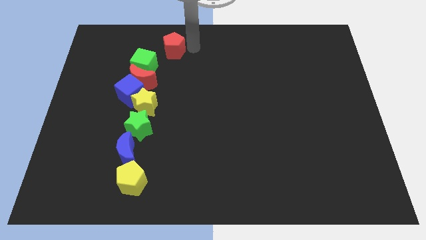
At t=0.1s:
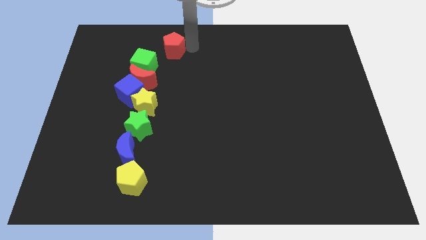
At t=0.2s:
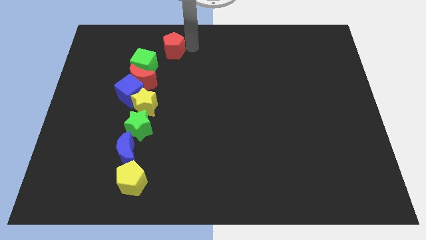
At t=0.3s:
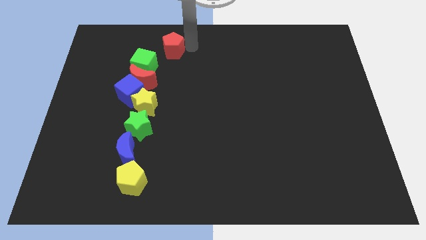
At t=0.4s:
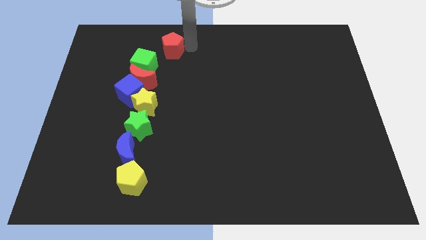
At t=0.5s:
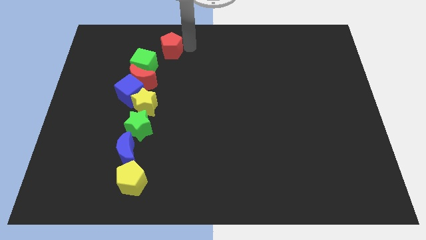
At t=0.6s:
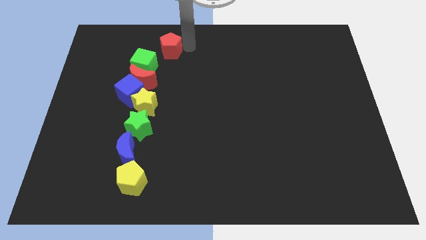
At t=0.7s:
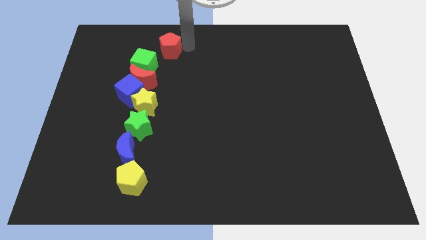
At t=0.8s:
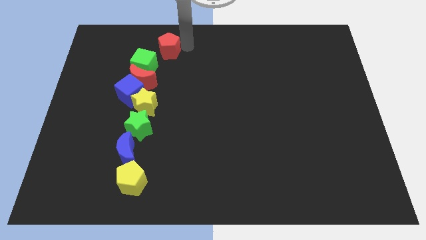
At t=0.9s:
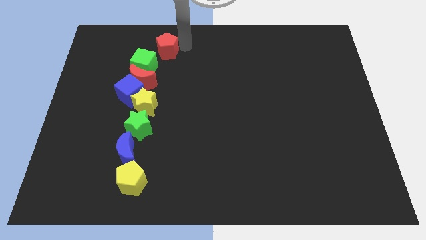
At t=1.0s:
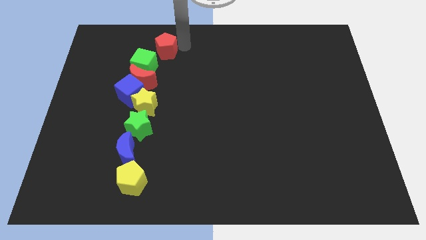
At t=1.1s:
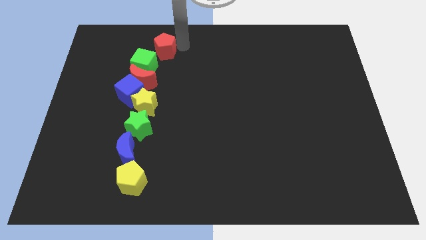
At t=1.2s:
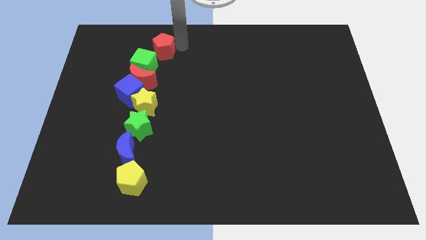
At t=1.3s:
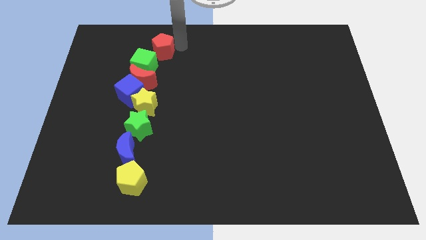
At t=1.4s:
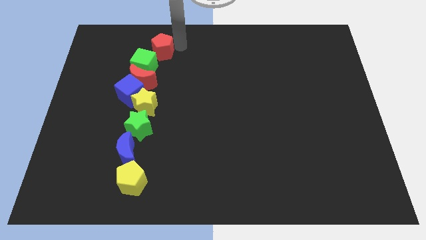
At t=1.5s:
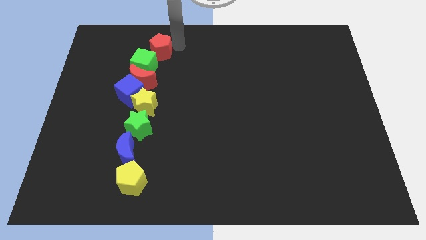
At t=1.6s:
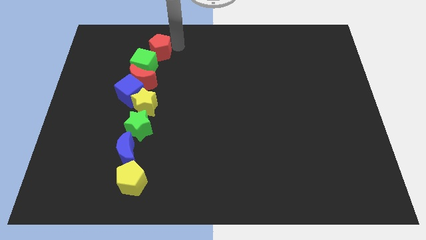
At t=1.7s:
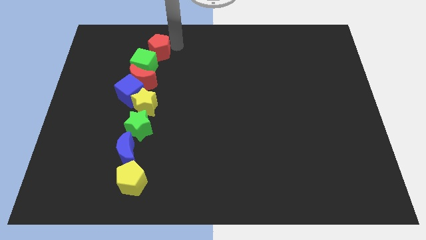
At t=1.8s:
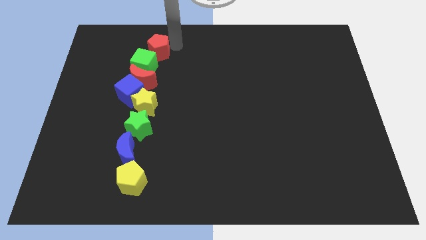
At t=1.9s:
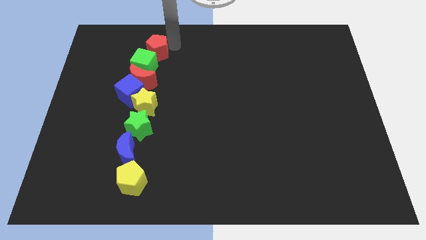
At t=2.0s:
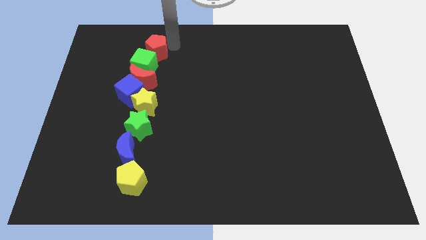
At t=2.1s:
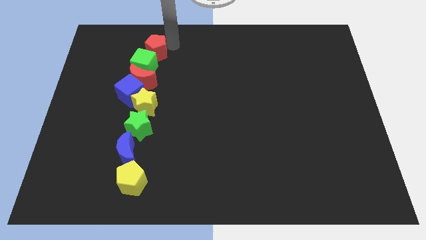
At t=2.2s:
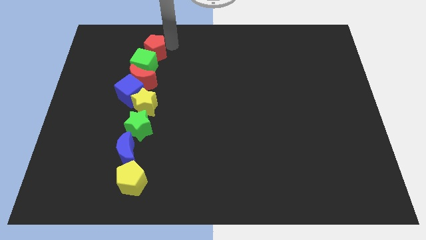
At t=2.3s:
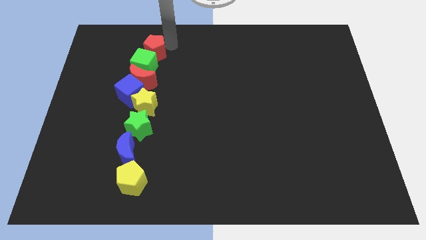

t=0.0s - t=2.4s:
push the red pentagon above the green cube

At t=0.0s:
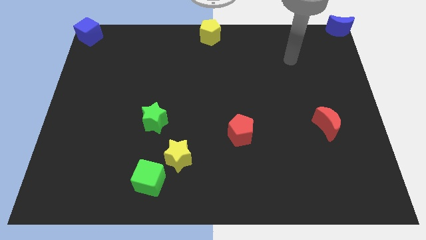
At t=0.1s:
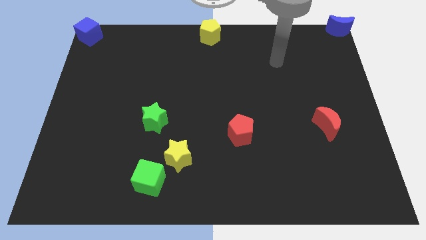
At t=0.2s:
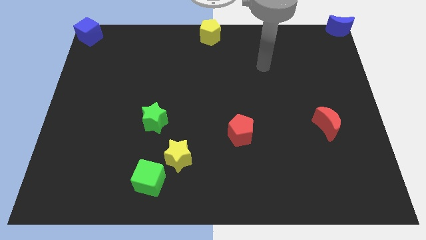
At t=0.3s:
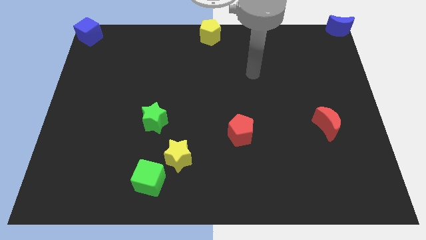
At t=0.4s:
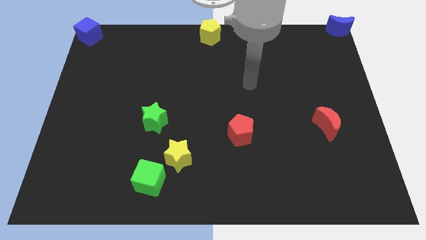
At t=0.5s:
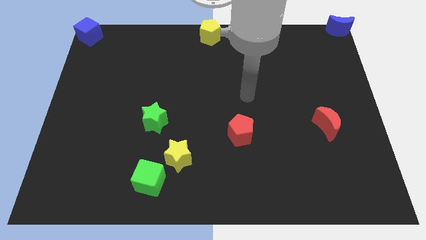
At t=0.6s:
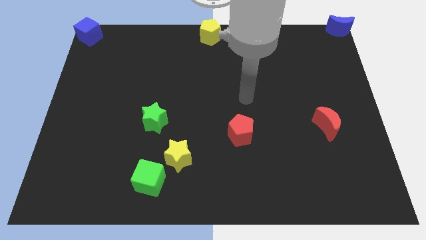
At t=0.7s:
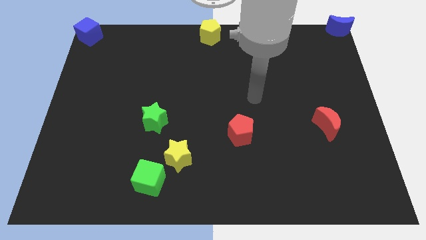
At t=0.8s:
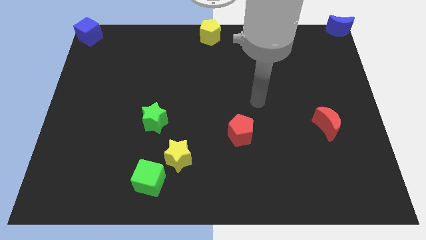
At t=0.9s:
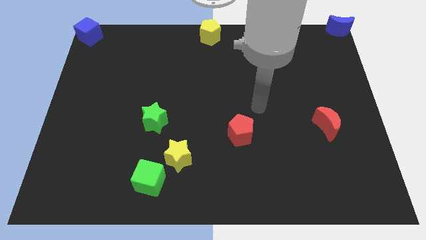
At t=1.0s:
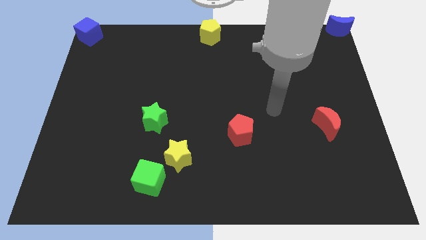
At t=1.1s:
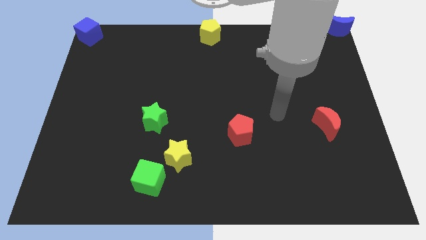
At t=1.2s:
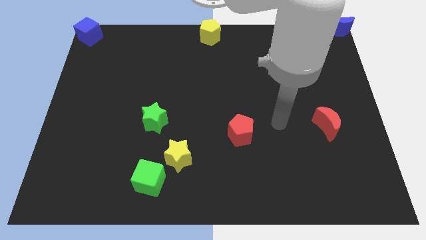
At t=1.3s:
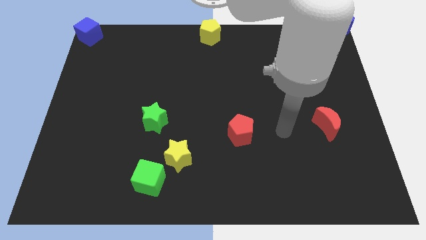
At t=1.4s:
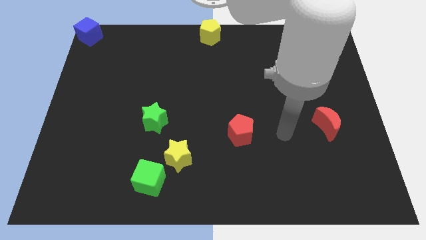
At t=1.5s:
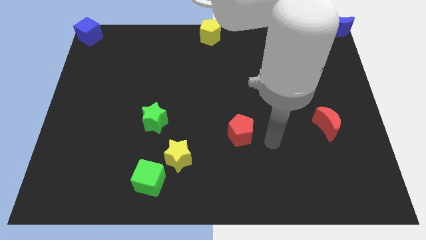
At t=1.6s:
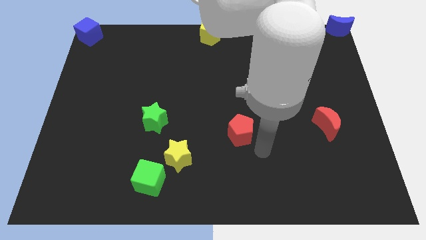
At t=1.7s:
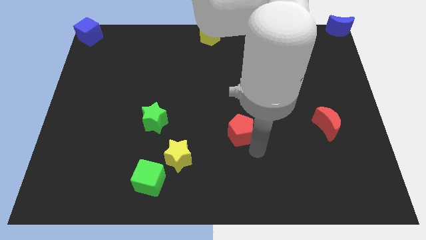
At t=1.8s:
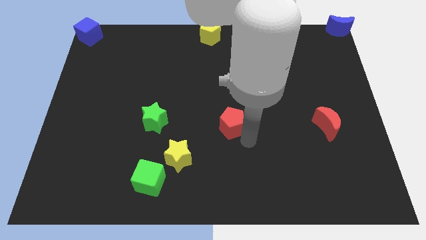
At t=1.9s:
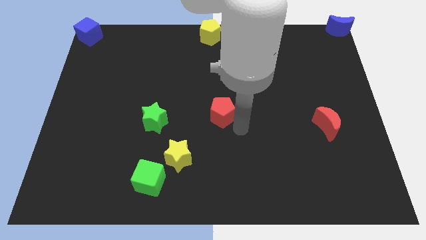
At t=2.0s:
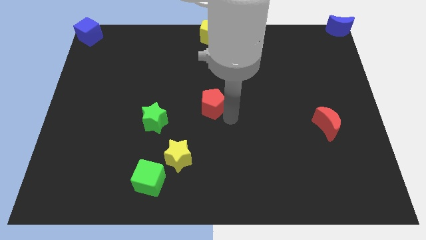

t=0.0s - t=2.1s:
push red pentagon to the center of the board

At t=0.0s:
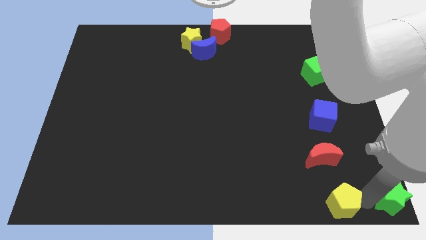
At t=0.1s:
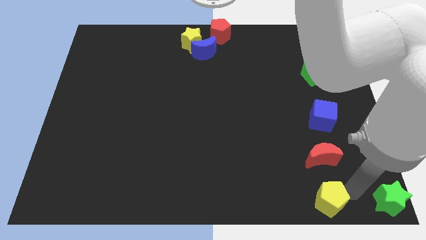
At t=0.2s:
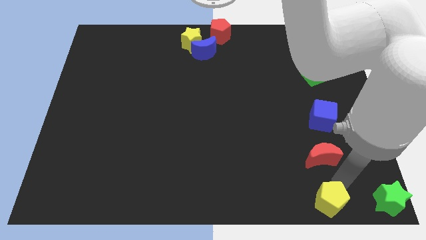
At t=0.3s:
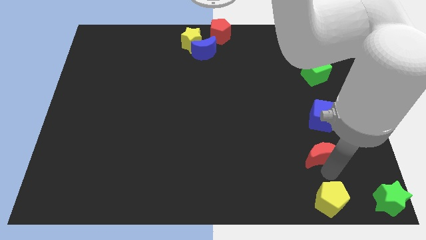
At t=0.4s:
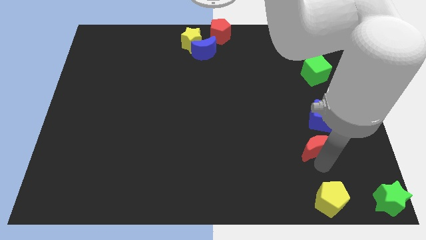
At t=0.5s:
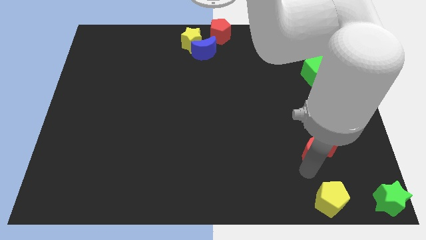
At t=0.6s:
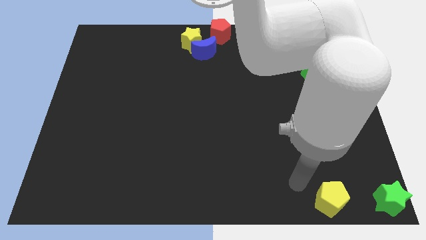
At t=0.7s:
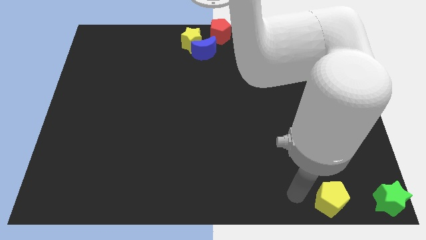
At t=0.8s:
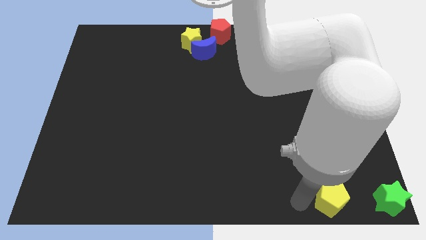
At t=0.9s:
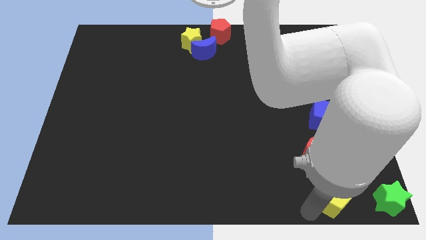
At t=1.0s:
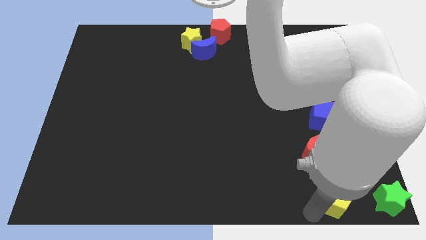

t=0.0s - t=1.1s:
slightly push the red moon up

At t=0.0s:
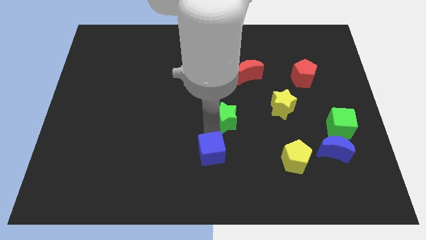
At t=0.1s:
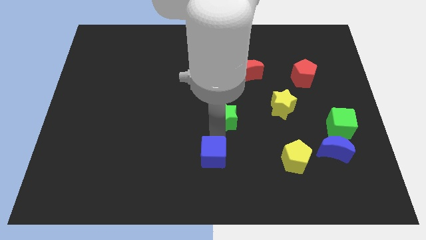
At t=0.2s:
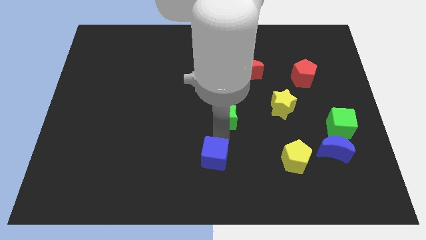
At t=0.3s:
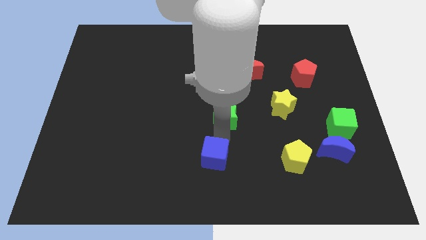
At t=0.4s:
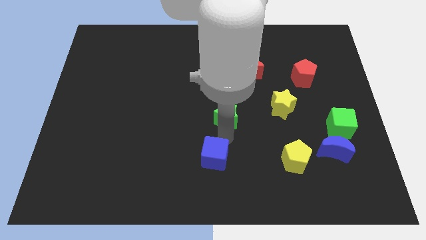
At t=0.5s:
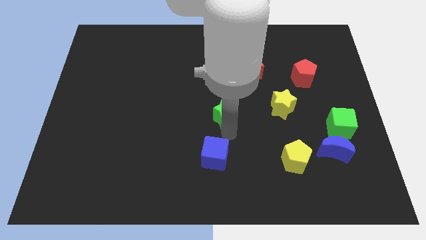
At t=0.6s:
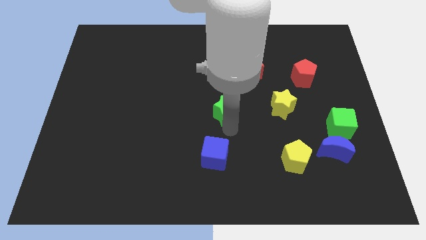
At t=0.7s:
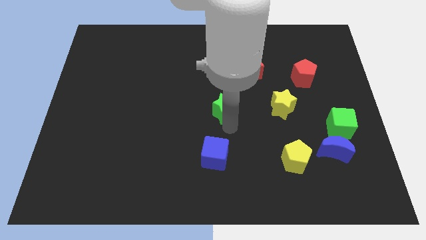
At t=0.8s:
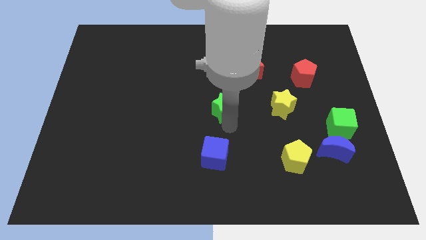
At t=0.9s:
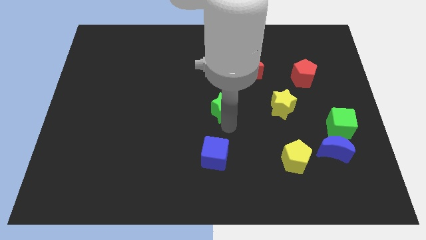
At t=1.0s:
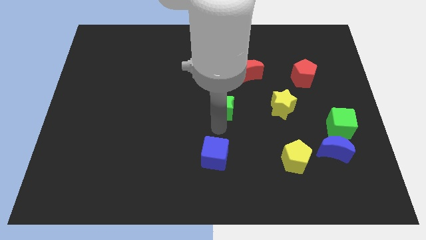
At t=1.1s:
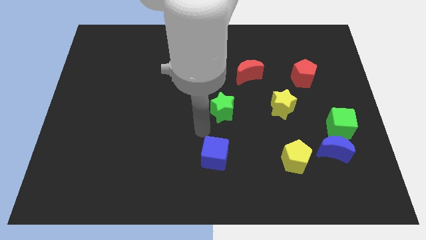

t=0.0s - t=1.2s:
slightly push the green star up

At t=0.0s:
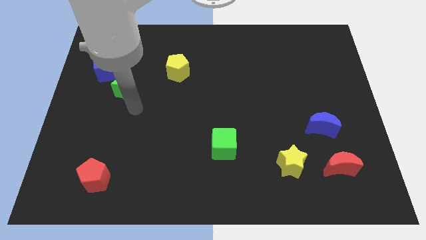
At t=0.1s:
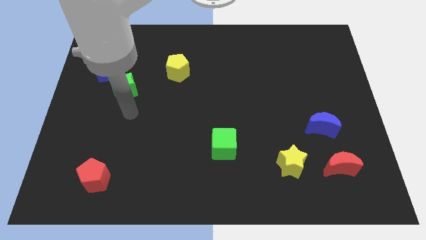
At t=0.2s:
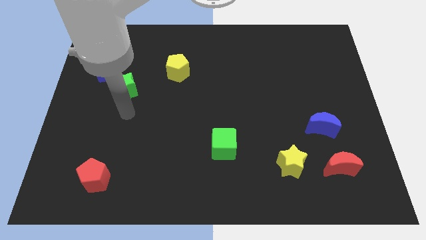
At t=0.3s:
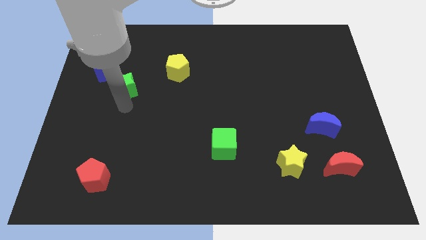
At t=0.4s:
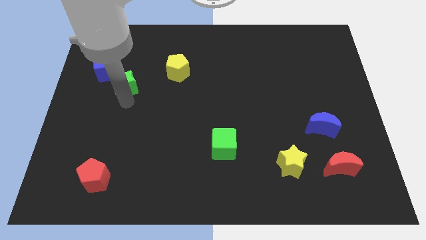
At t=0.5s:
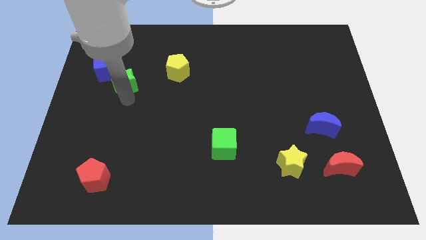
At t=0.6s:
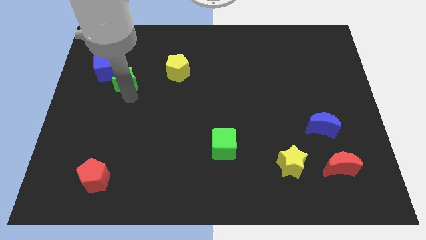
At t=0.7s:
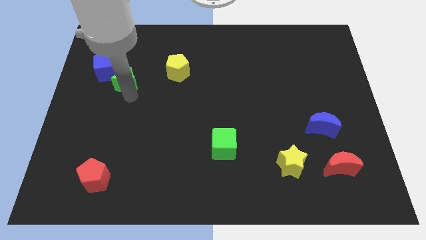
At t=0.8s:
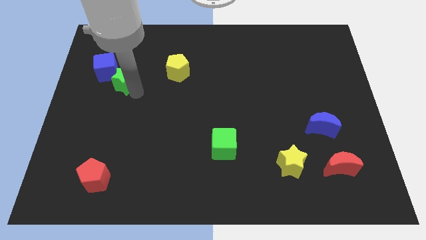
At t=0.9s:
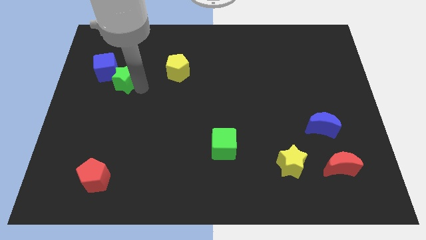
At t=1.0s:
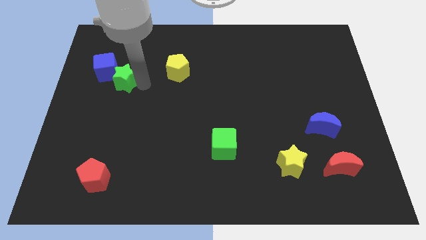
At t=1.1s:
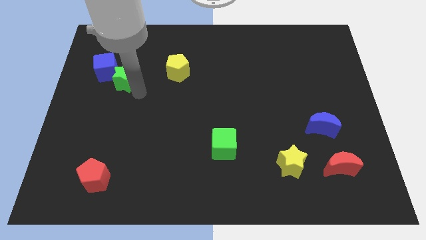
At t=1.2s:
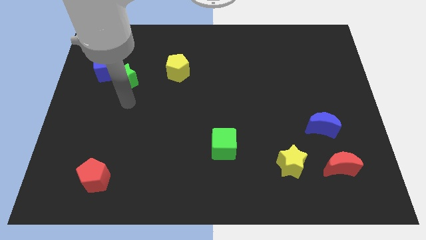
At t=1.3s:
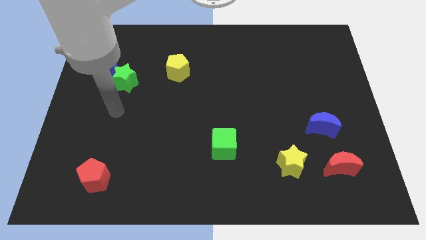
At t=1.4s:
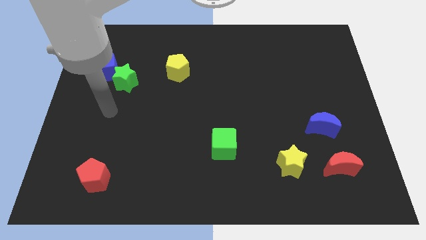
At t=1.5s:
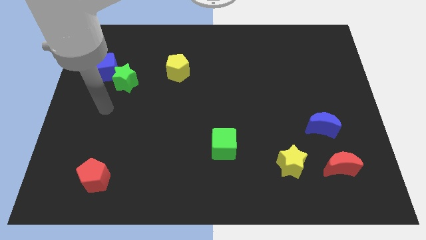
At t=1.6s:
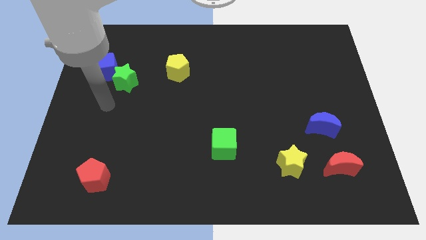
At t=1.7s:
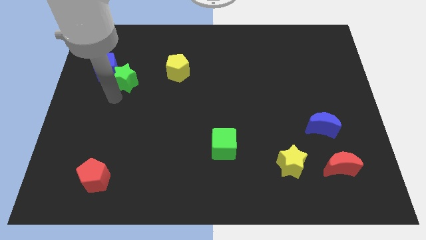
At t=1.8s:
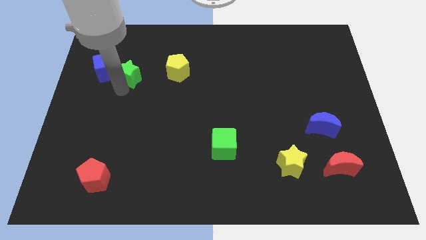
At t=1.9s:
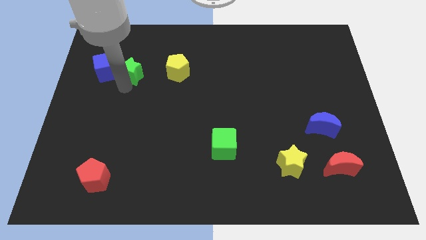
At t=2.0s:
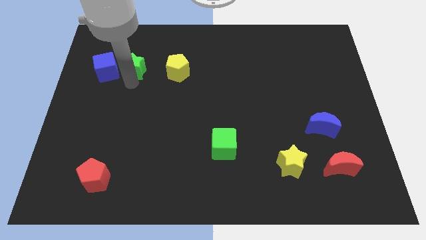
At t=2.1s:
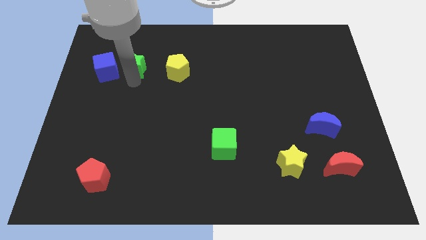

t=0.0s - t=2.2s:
move the green star towards the right to the blue cube
